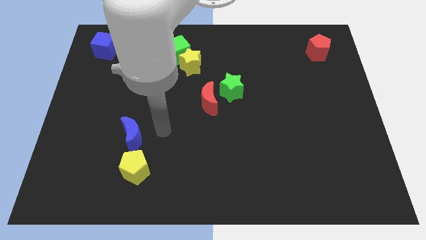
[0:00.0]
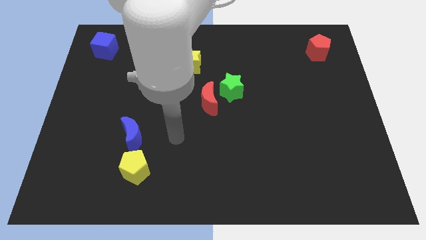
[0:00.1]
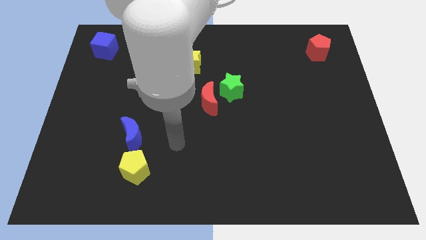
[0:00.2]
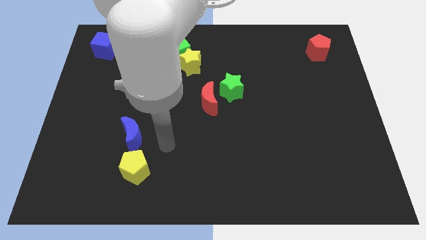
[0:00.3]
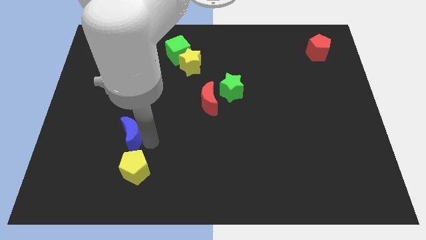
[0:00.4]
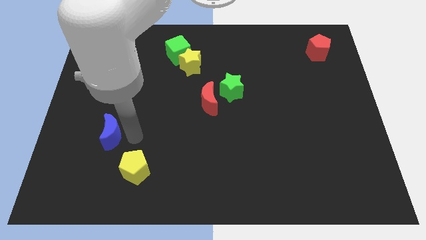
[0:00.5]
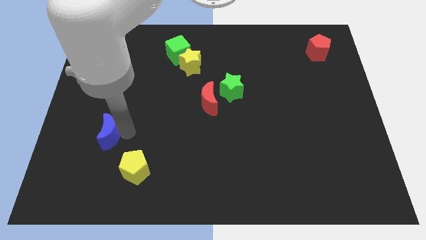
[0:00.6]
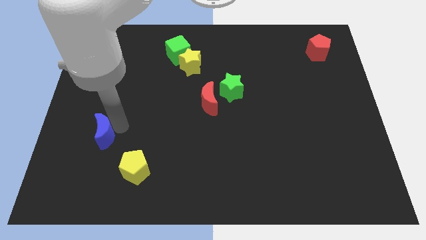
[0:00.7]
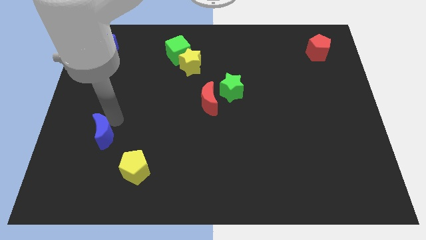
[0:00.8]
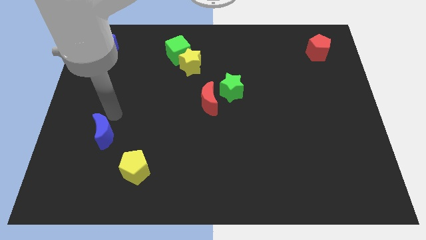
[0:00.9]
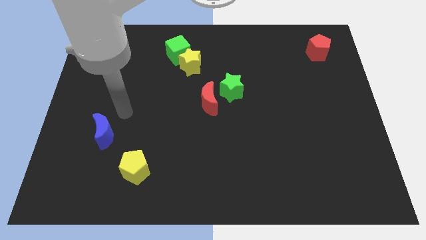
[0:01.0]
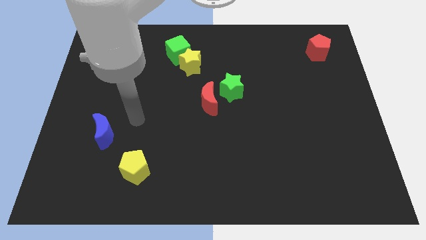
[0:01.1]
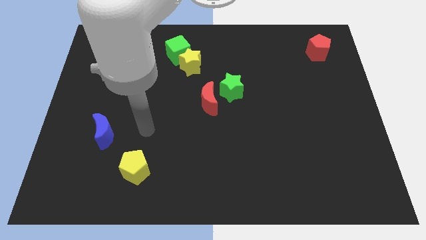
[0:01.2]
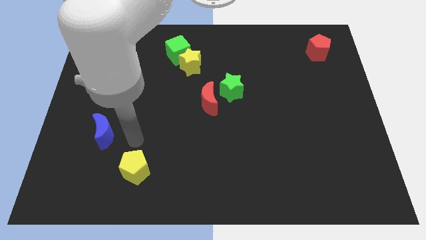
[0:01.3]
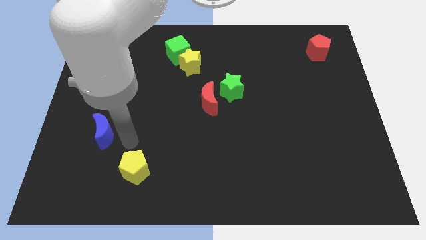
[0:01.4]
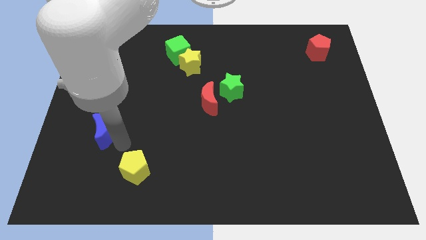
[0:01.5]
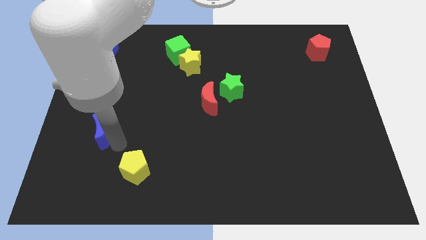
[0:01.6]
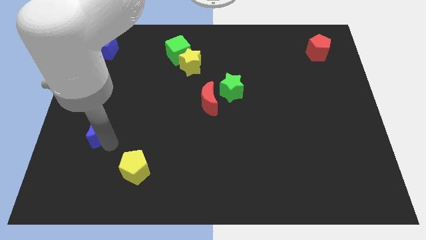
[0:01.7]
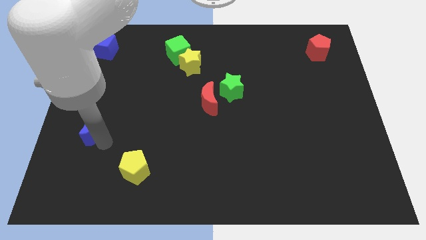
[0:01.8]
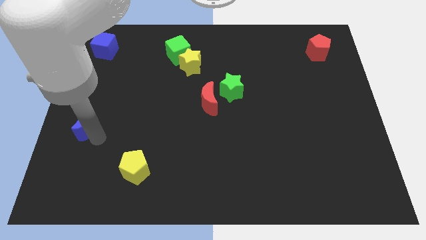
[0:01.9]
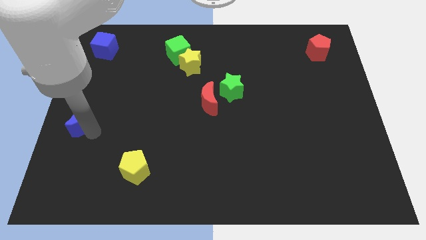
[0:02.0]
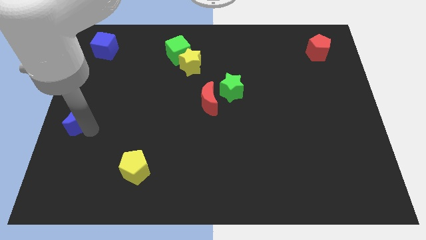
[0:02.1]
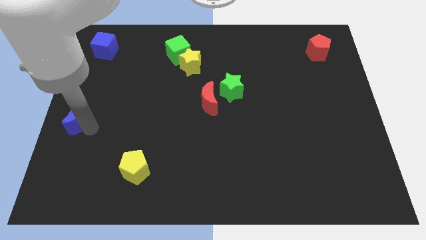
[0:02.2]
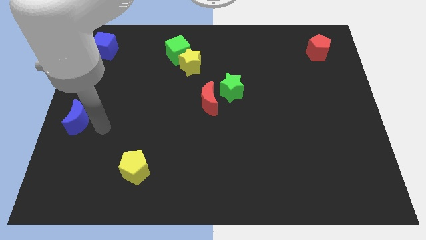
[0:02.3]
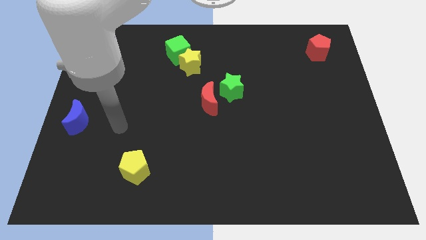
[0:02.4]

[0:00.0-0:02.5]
move the blue crescent to the center left of the board

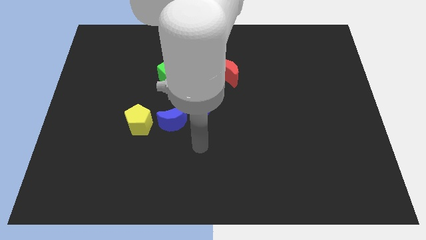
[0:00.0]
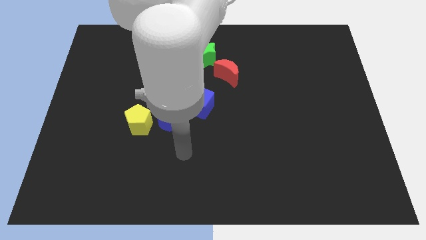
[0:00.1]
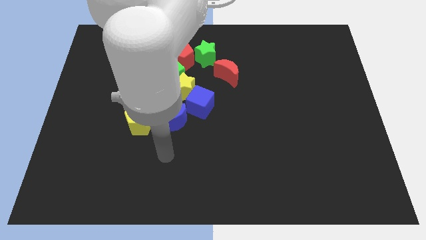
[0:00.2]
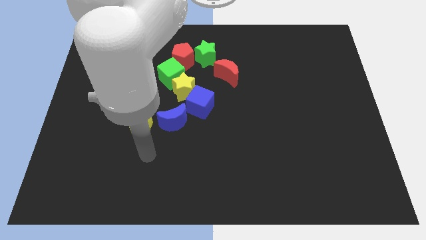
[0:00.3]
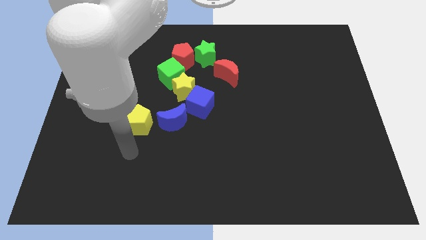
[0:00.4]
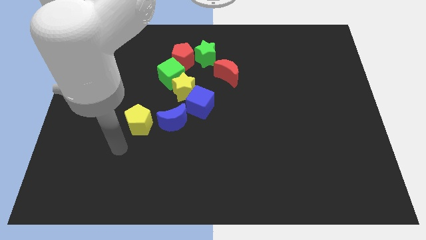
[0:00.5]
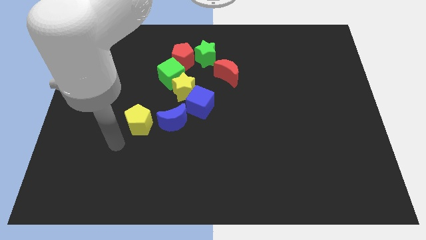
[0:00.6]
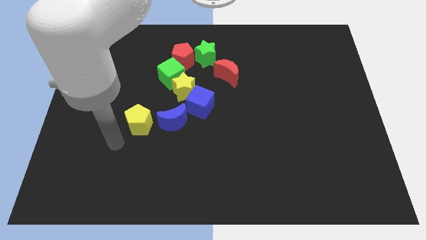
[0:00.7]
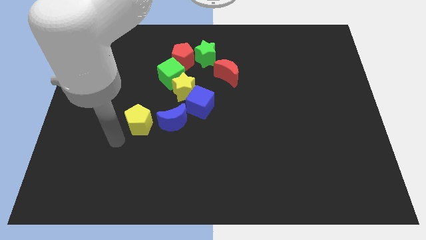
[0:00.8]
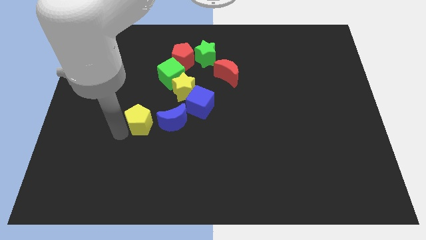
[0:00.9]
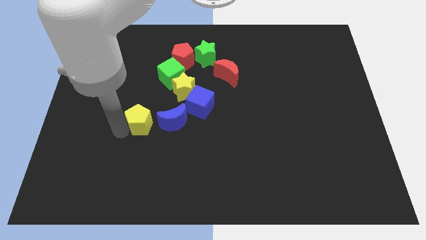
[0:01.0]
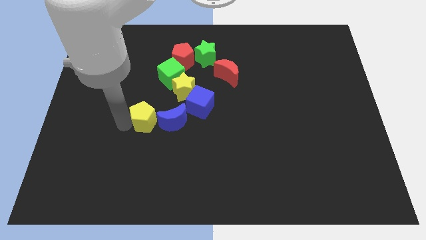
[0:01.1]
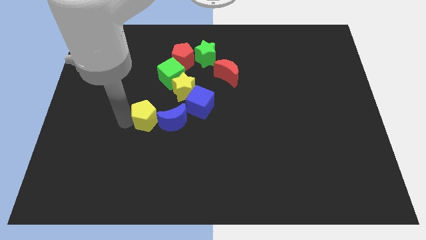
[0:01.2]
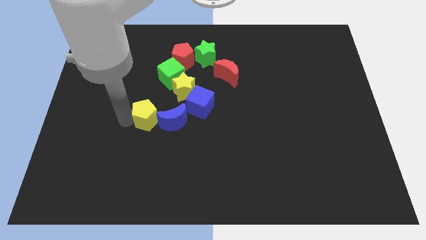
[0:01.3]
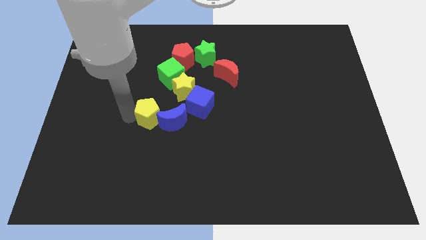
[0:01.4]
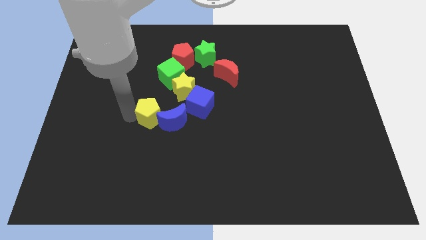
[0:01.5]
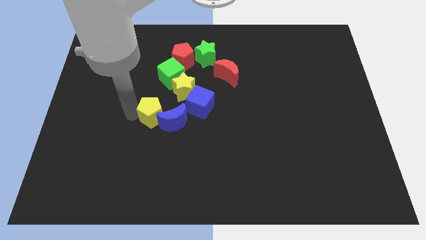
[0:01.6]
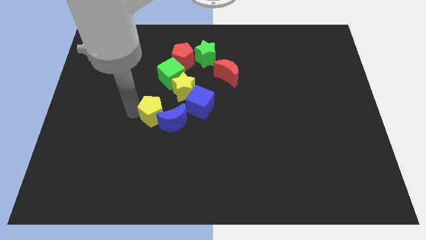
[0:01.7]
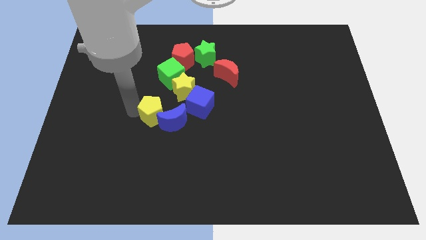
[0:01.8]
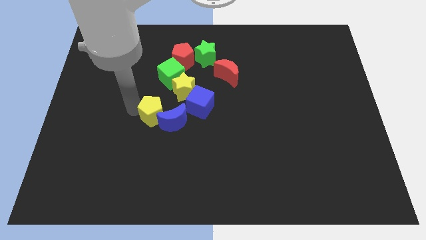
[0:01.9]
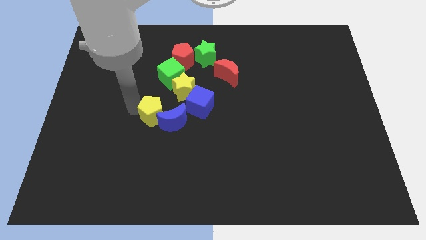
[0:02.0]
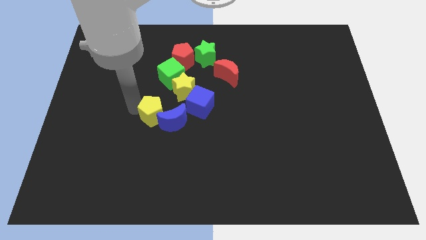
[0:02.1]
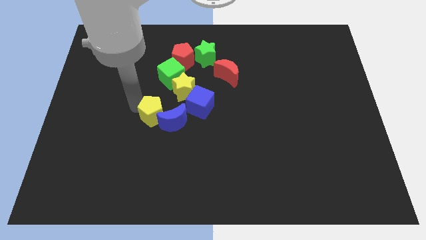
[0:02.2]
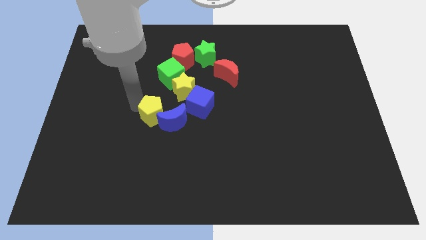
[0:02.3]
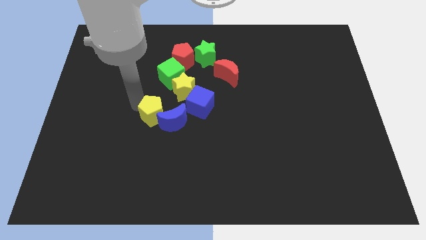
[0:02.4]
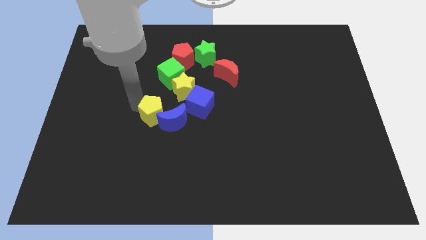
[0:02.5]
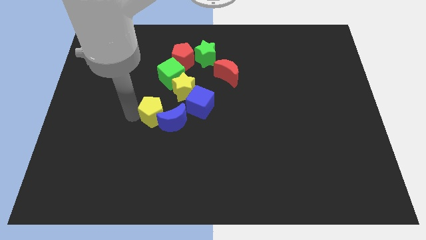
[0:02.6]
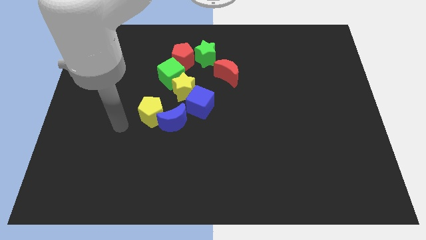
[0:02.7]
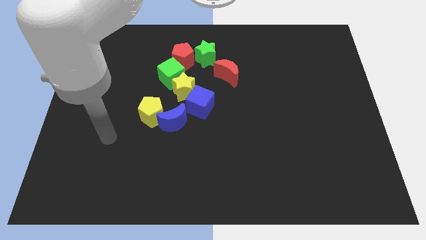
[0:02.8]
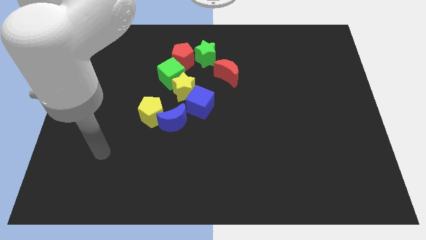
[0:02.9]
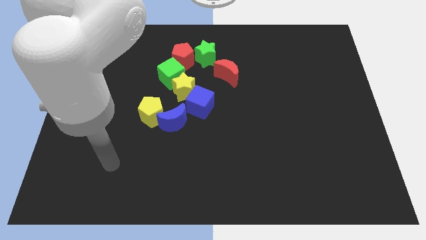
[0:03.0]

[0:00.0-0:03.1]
slightly move the yellow pentagon left to the blue moon

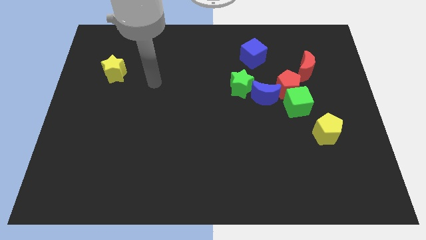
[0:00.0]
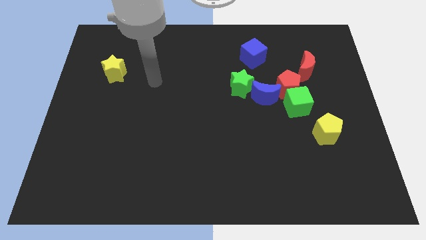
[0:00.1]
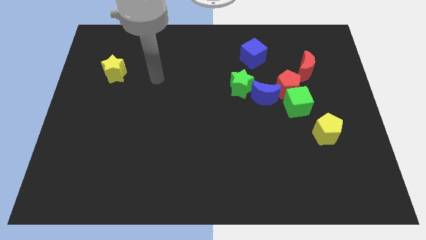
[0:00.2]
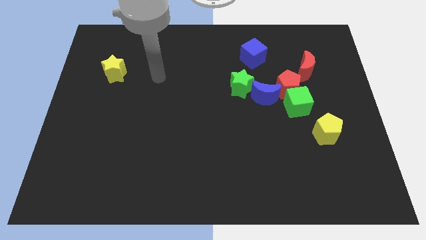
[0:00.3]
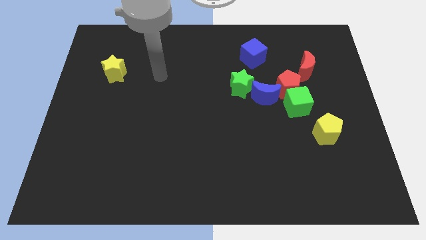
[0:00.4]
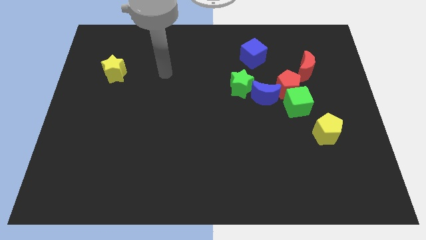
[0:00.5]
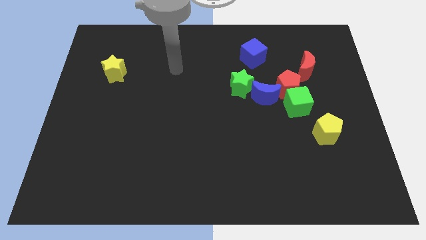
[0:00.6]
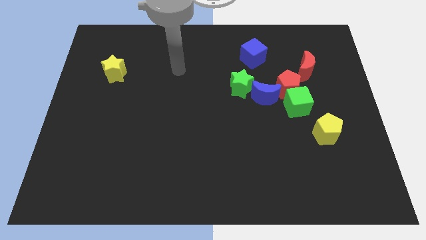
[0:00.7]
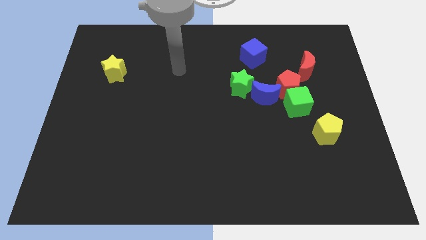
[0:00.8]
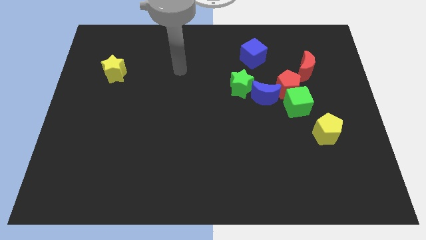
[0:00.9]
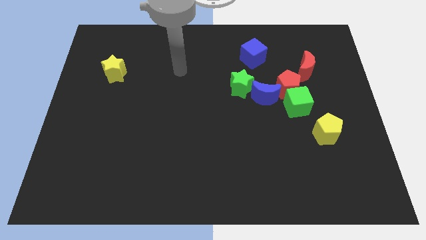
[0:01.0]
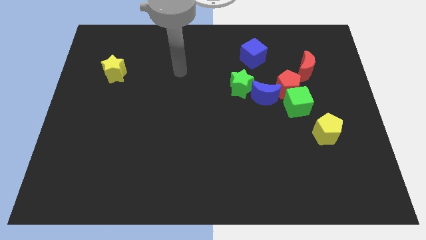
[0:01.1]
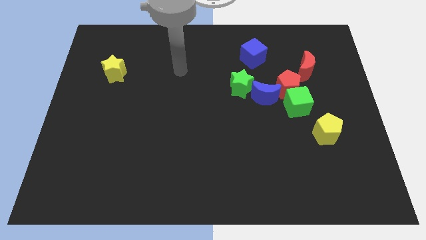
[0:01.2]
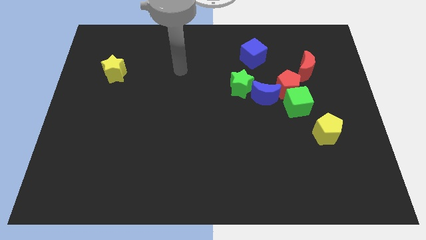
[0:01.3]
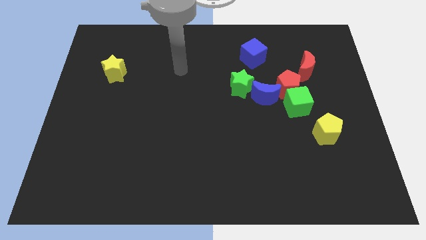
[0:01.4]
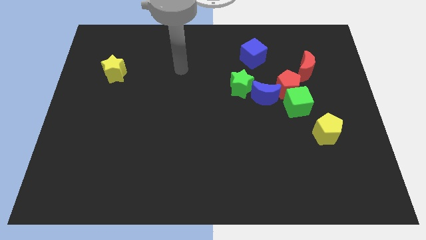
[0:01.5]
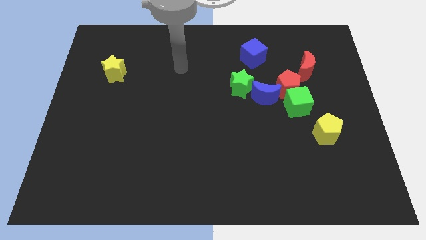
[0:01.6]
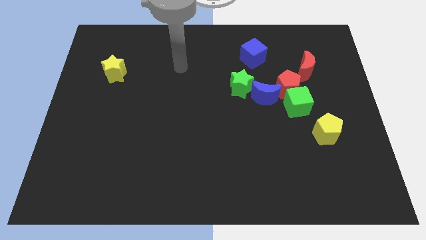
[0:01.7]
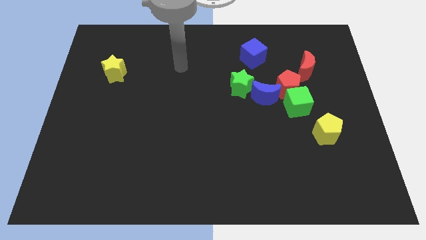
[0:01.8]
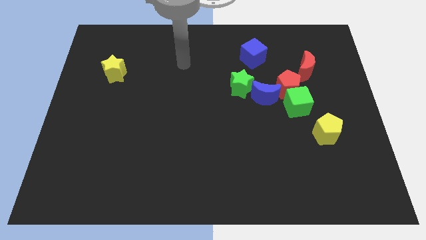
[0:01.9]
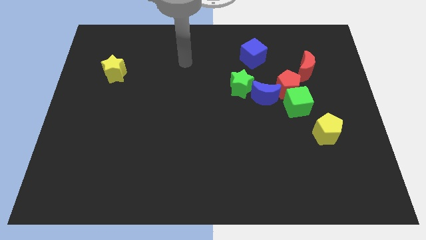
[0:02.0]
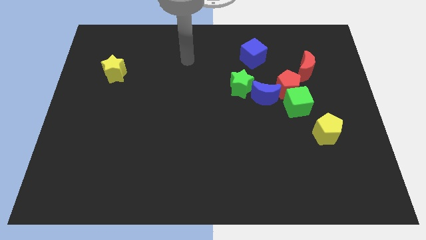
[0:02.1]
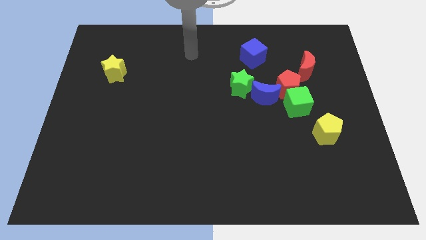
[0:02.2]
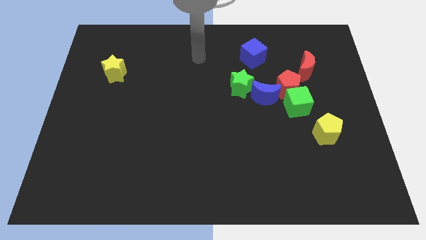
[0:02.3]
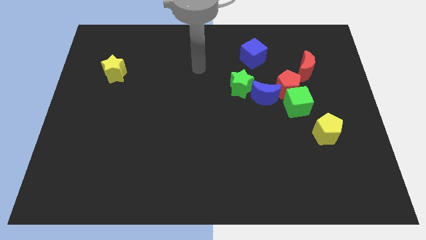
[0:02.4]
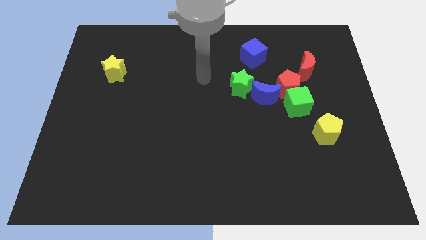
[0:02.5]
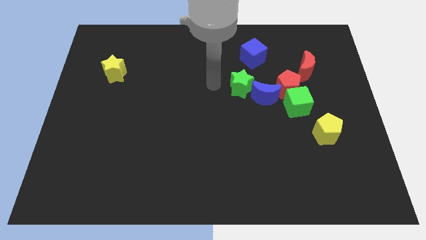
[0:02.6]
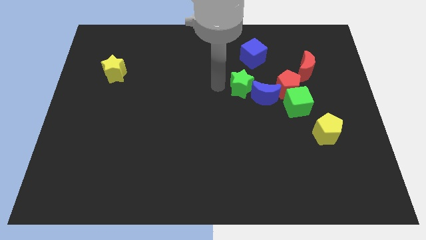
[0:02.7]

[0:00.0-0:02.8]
place your arm to the left of the green star

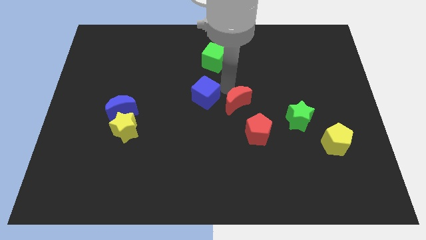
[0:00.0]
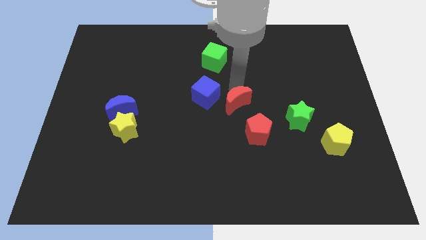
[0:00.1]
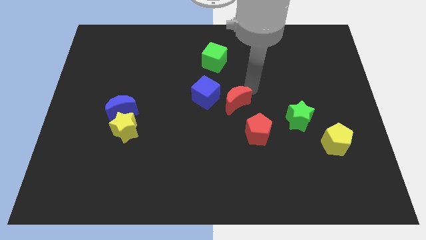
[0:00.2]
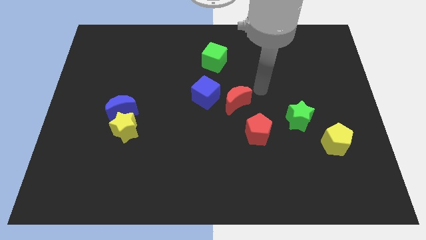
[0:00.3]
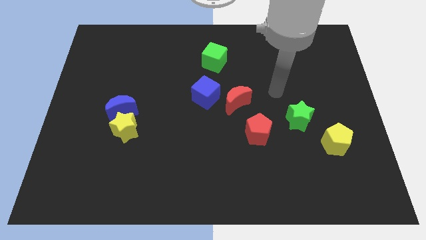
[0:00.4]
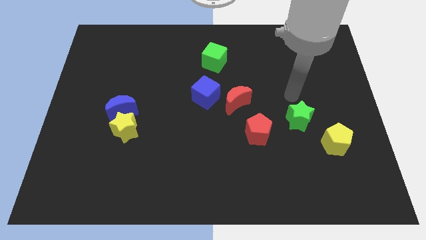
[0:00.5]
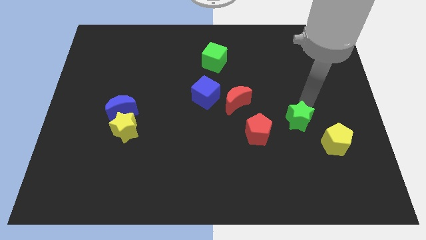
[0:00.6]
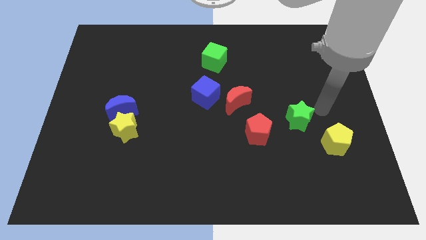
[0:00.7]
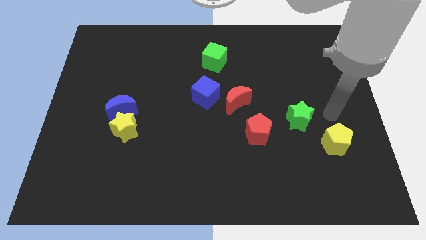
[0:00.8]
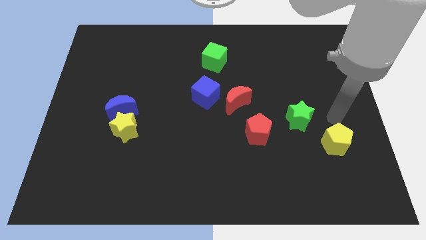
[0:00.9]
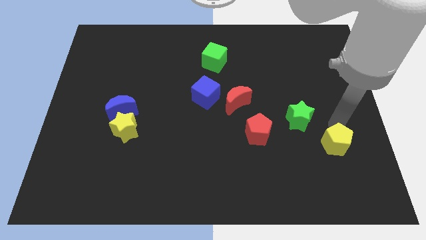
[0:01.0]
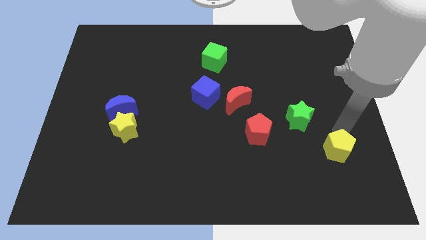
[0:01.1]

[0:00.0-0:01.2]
move your arm towards the yellow pentagon
